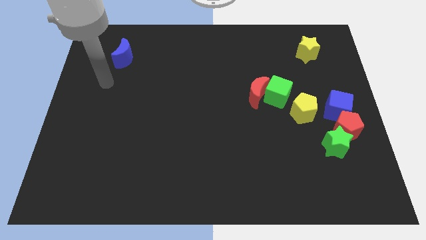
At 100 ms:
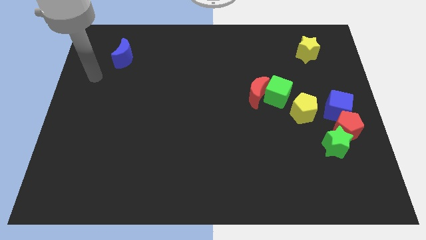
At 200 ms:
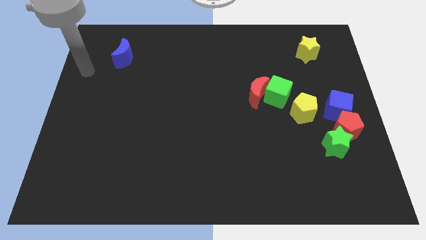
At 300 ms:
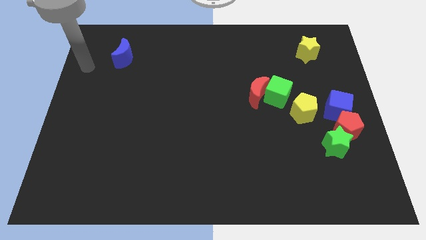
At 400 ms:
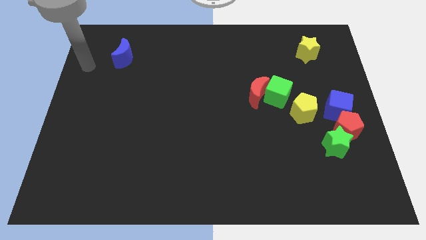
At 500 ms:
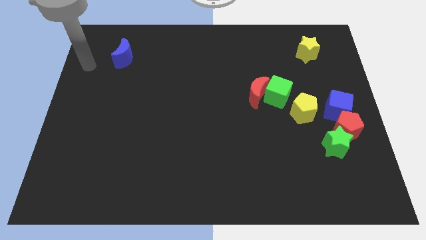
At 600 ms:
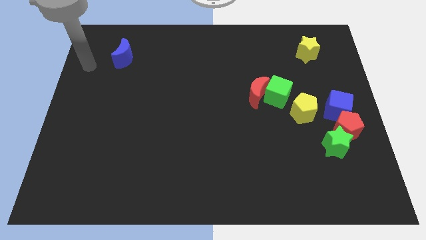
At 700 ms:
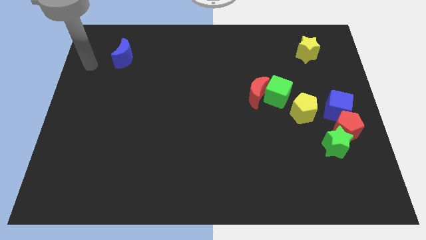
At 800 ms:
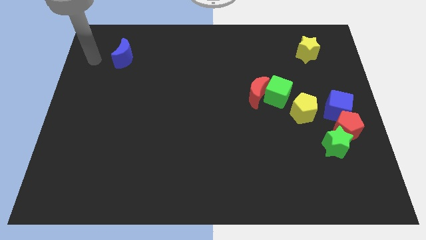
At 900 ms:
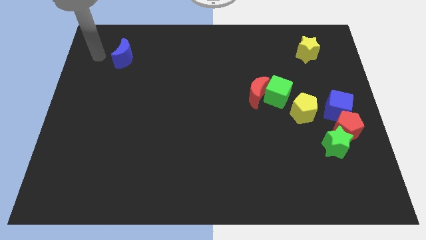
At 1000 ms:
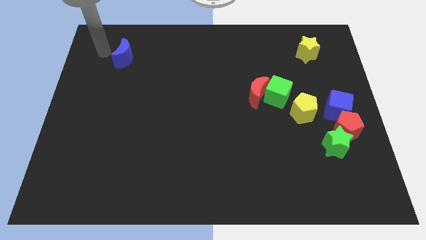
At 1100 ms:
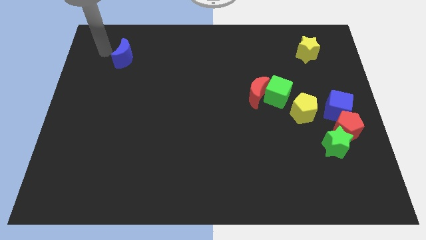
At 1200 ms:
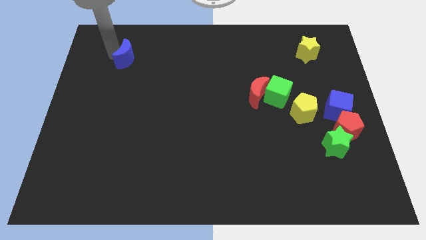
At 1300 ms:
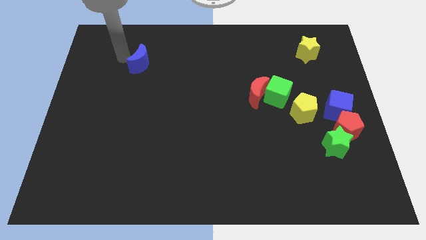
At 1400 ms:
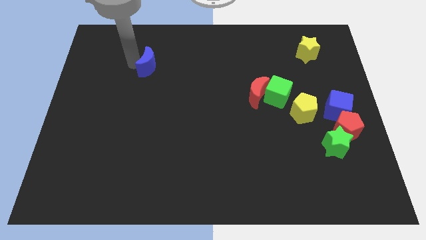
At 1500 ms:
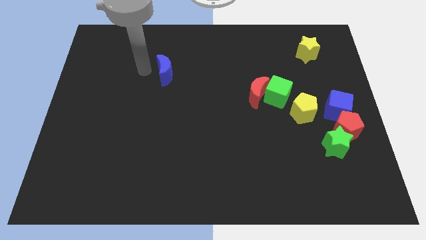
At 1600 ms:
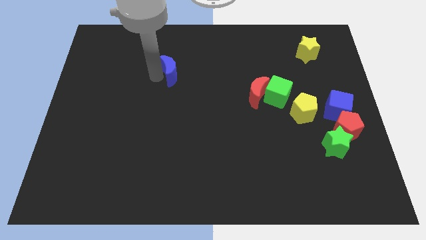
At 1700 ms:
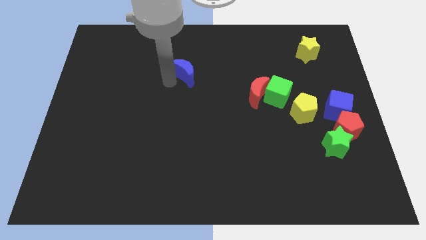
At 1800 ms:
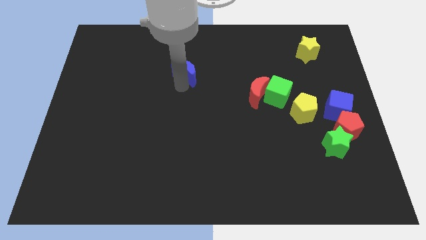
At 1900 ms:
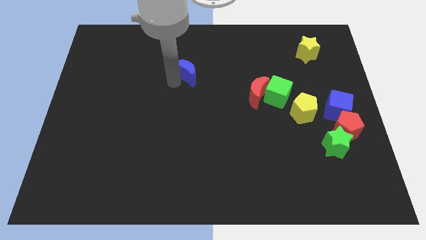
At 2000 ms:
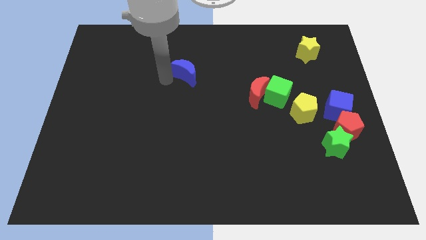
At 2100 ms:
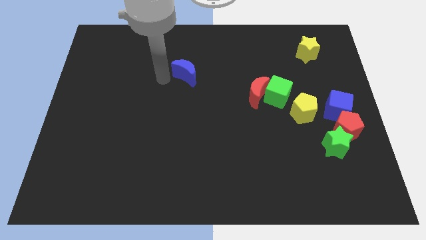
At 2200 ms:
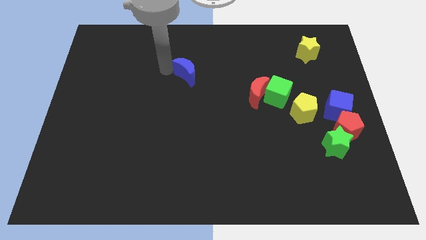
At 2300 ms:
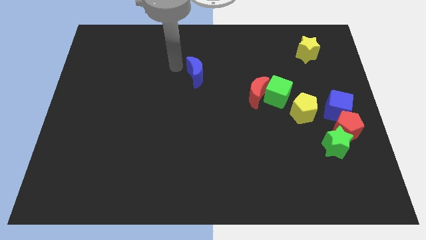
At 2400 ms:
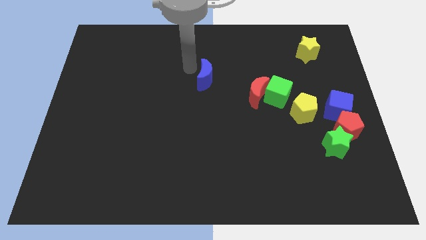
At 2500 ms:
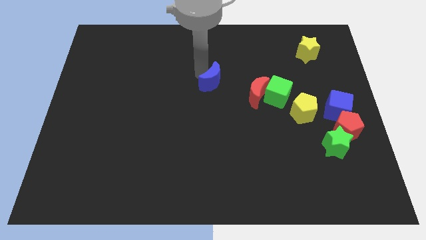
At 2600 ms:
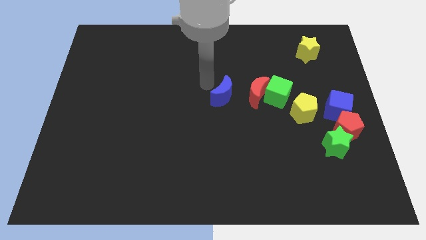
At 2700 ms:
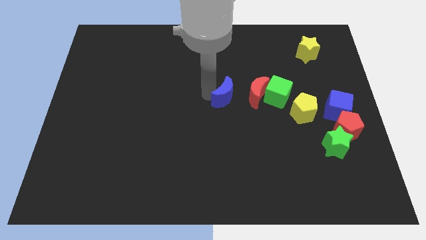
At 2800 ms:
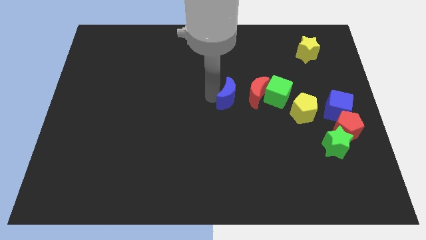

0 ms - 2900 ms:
move the blue moon to the center

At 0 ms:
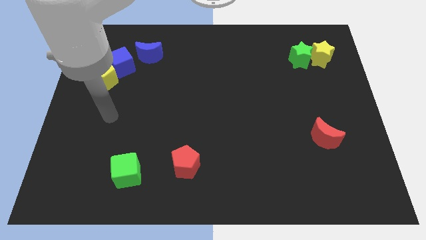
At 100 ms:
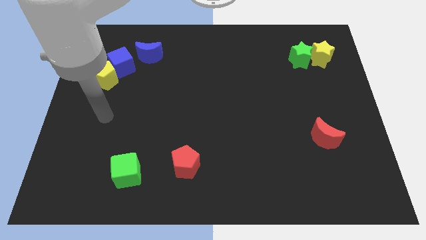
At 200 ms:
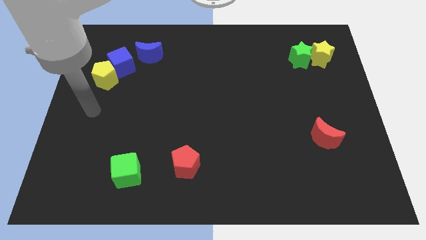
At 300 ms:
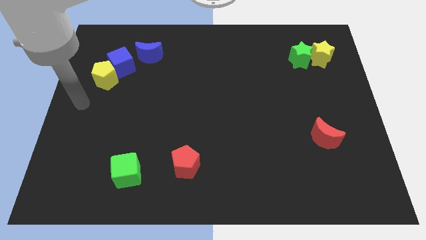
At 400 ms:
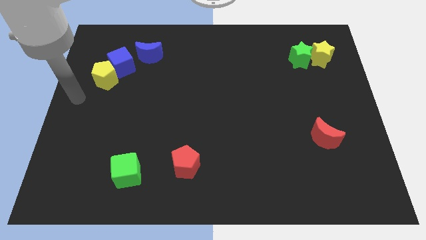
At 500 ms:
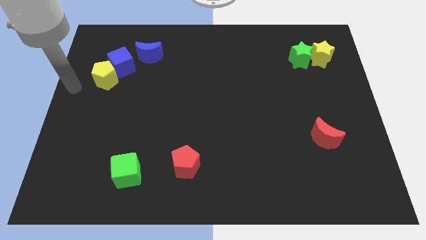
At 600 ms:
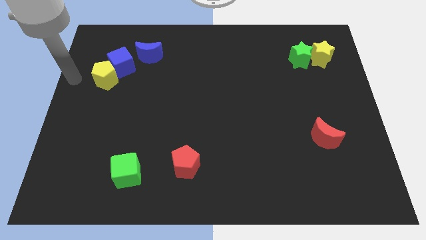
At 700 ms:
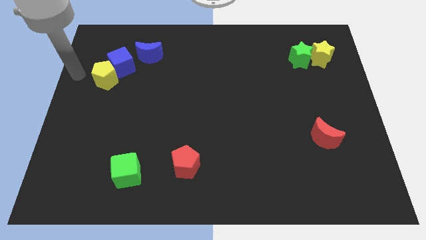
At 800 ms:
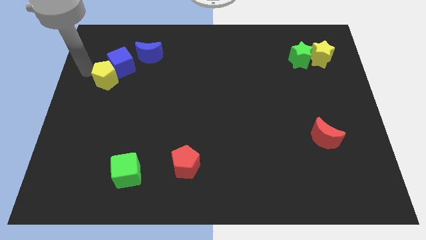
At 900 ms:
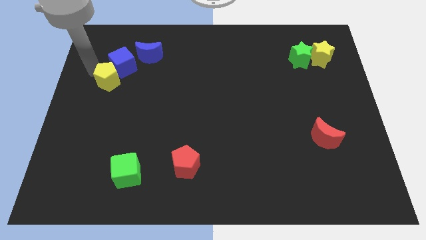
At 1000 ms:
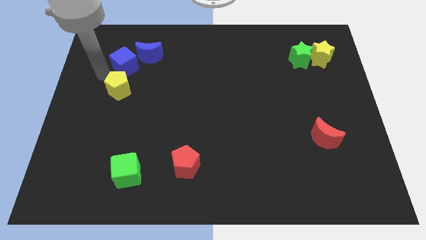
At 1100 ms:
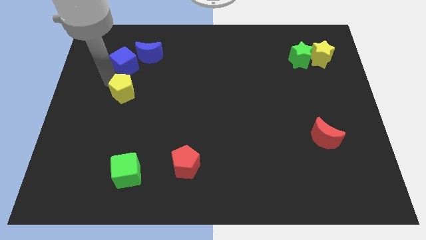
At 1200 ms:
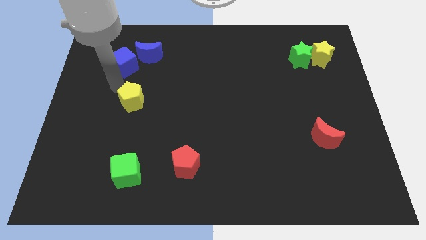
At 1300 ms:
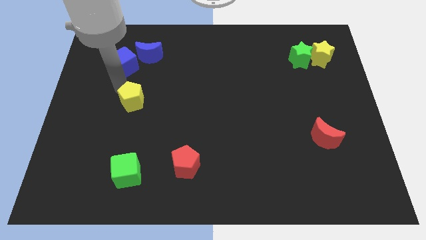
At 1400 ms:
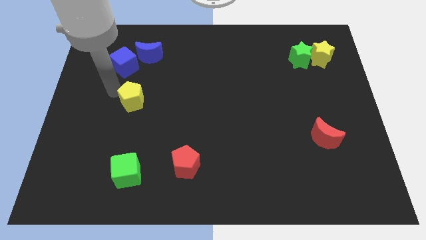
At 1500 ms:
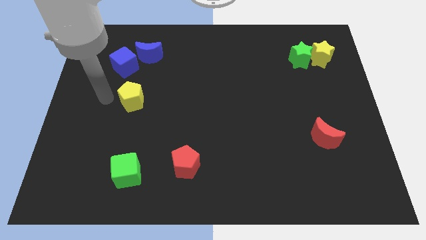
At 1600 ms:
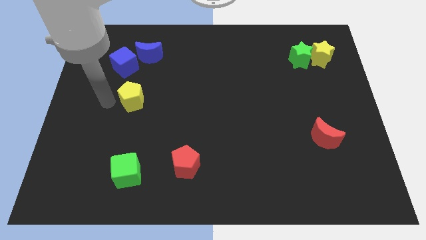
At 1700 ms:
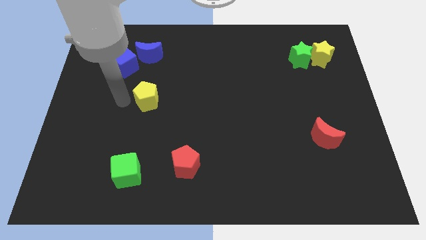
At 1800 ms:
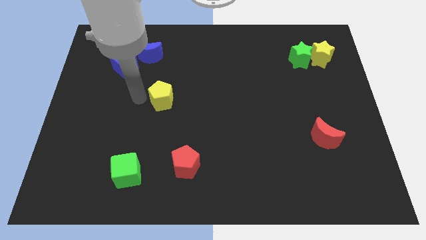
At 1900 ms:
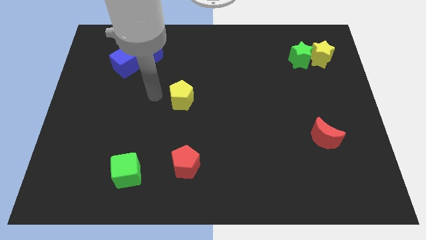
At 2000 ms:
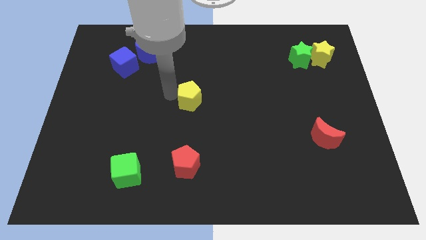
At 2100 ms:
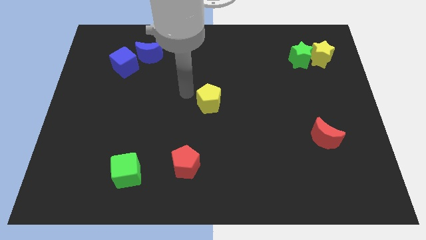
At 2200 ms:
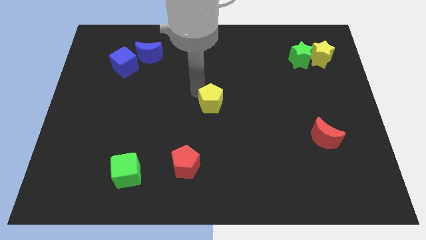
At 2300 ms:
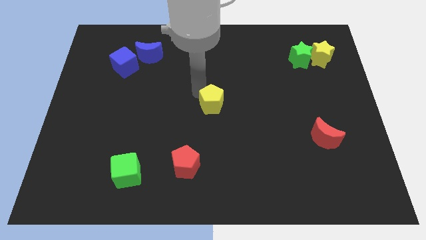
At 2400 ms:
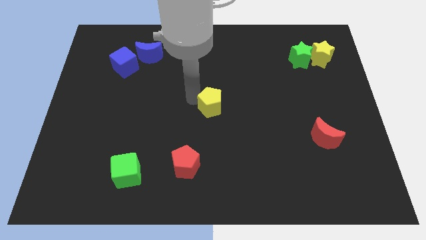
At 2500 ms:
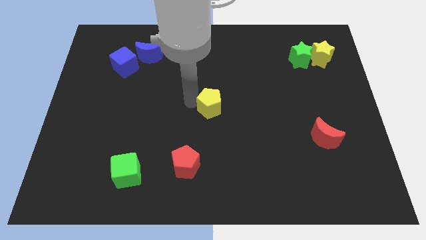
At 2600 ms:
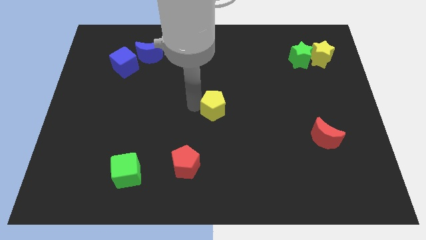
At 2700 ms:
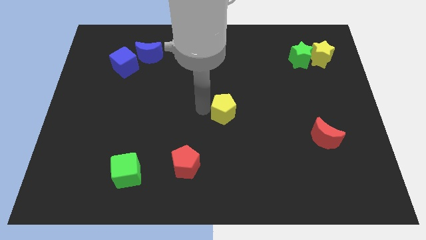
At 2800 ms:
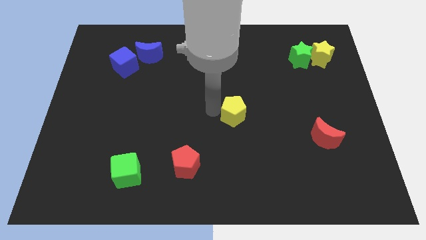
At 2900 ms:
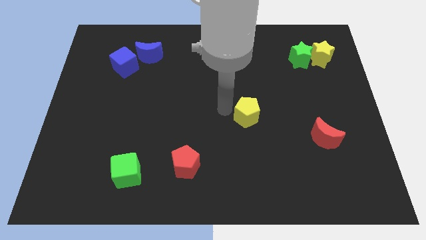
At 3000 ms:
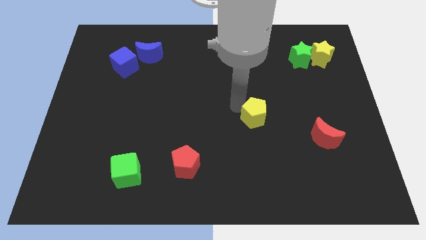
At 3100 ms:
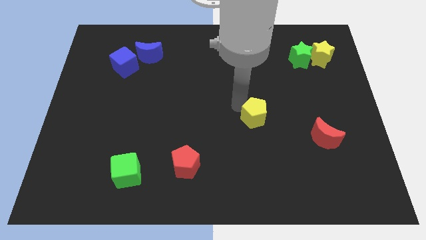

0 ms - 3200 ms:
move the yellow pentagon away from blue blocks

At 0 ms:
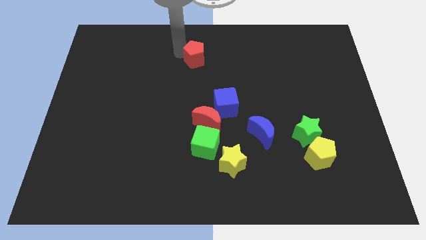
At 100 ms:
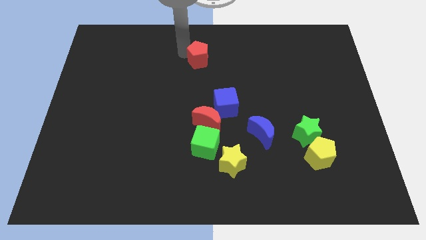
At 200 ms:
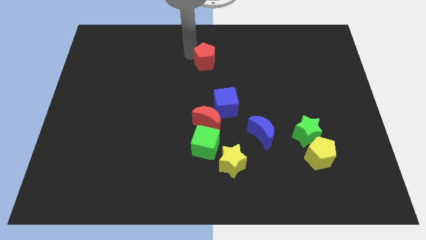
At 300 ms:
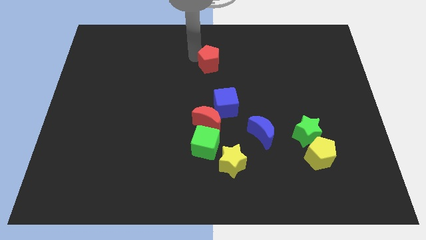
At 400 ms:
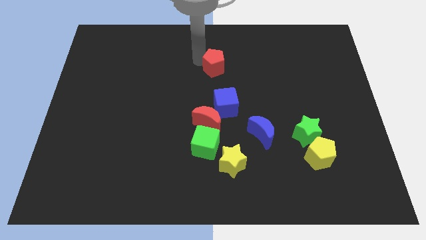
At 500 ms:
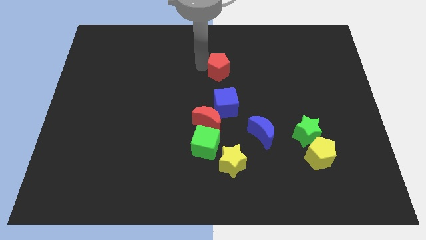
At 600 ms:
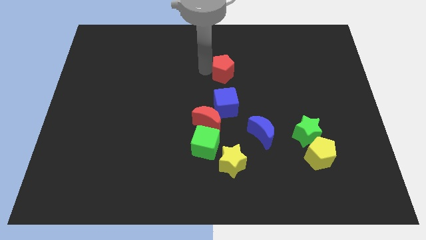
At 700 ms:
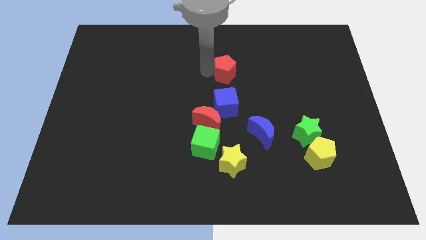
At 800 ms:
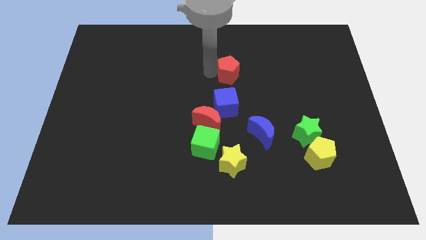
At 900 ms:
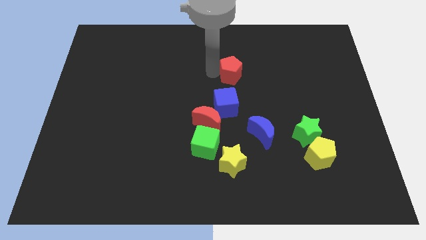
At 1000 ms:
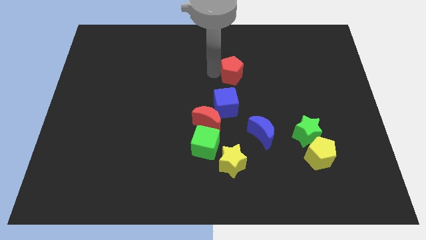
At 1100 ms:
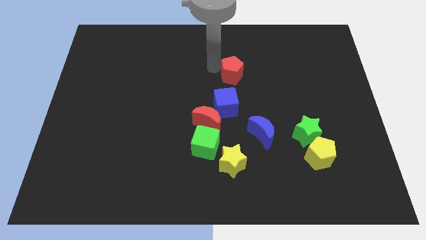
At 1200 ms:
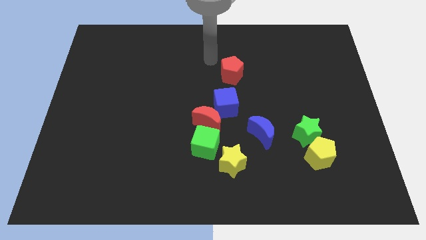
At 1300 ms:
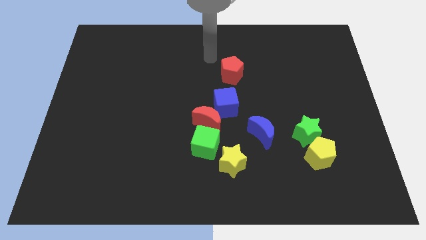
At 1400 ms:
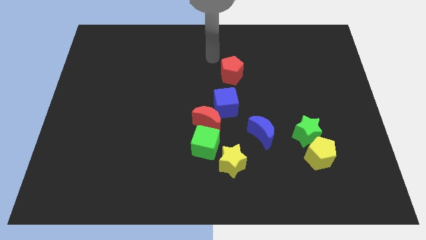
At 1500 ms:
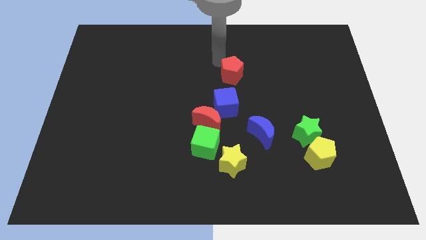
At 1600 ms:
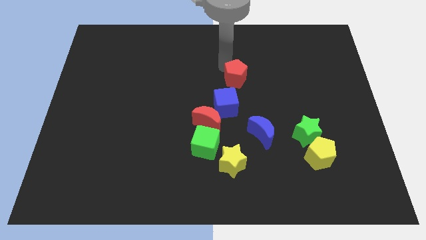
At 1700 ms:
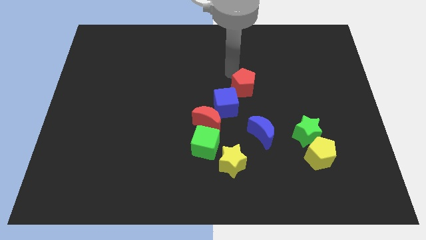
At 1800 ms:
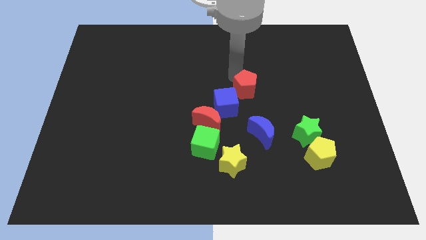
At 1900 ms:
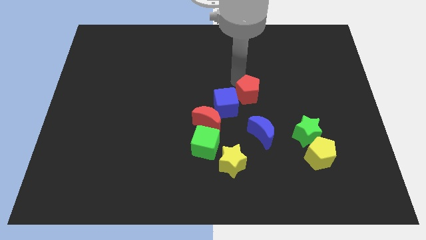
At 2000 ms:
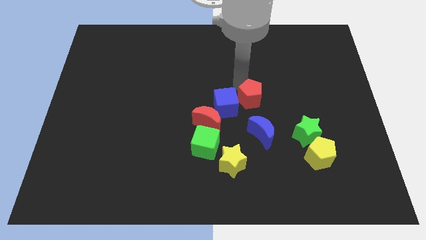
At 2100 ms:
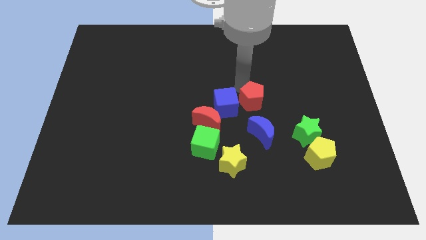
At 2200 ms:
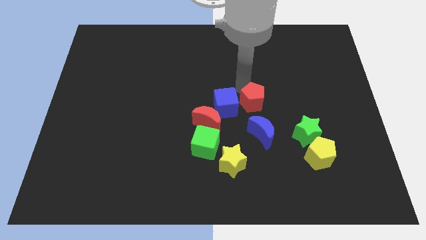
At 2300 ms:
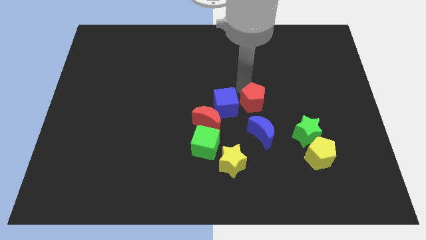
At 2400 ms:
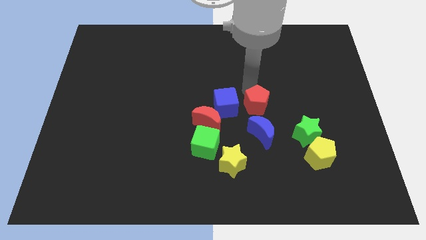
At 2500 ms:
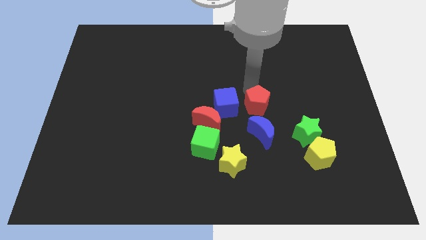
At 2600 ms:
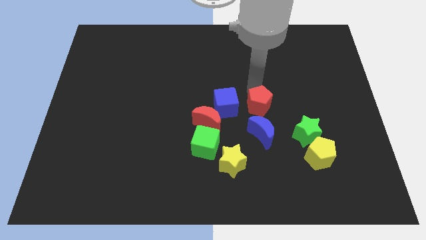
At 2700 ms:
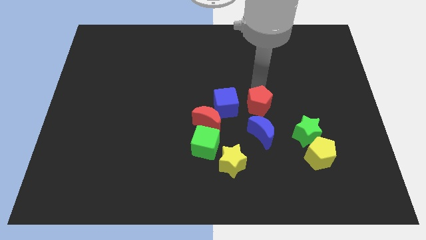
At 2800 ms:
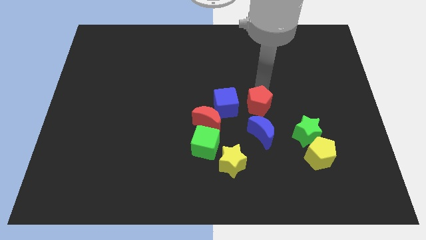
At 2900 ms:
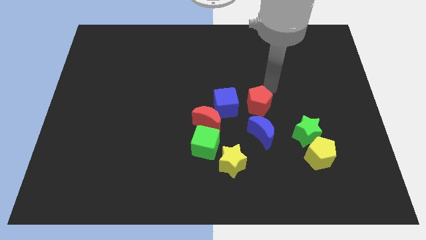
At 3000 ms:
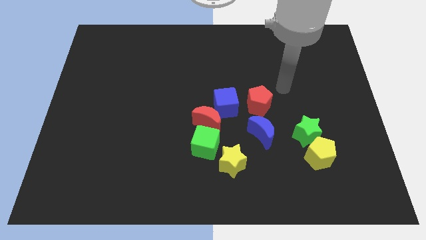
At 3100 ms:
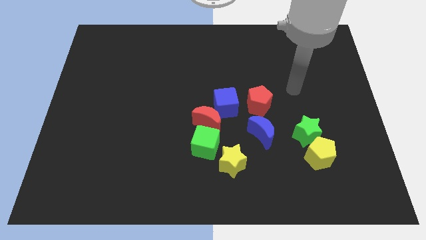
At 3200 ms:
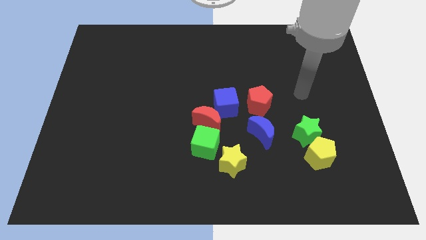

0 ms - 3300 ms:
push red pentagon to the top of blue crescent
